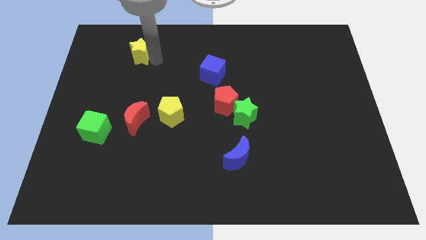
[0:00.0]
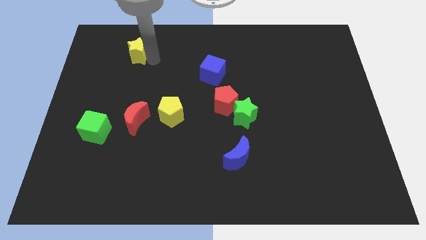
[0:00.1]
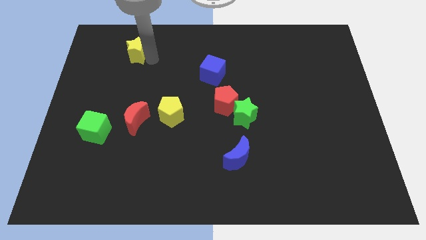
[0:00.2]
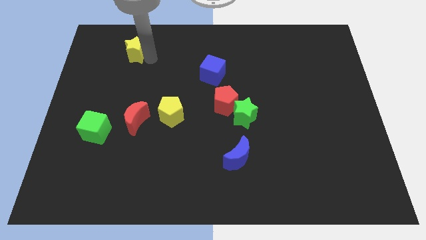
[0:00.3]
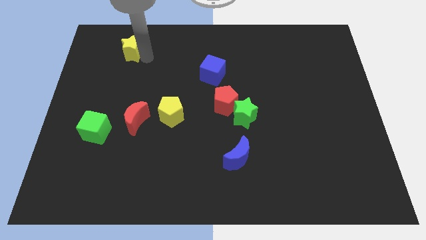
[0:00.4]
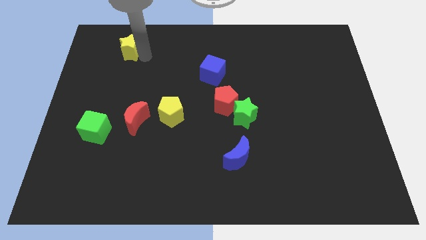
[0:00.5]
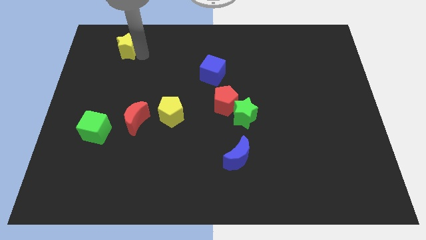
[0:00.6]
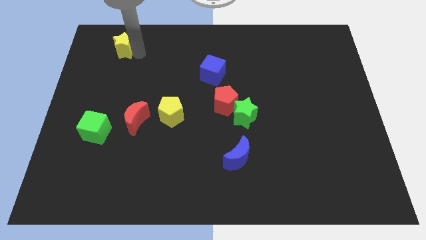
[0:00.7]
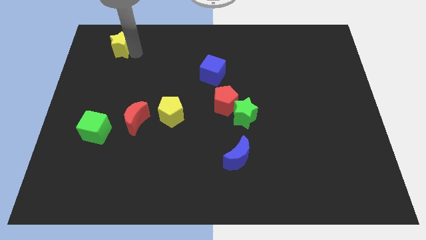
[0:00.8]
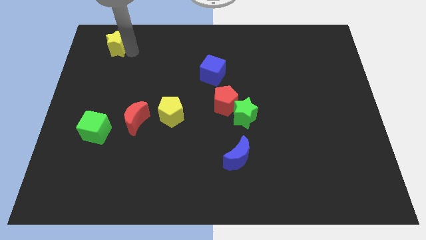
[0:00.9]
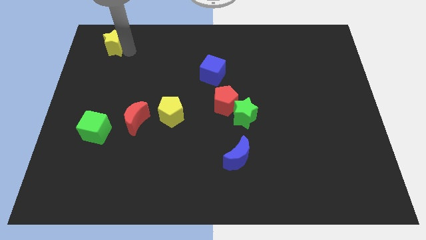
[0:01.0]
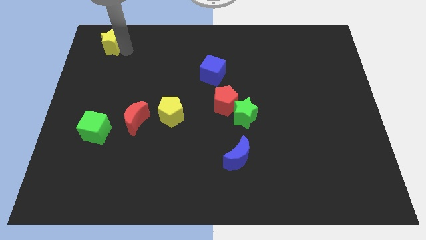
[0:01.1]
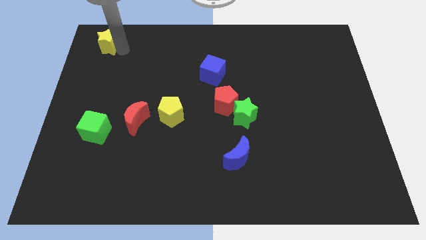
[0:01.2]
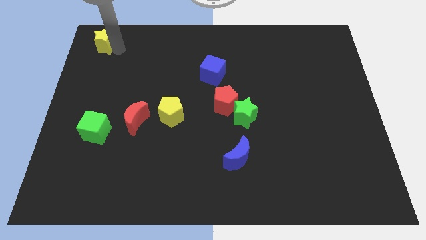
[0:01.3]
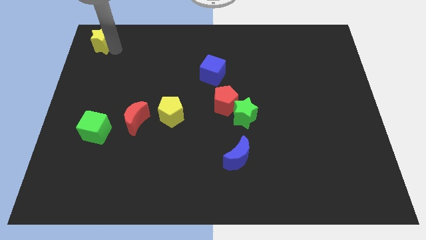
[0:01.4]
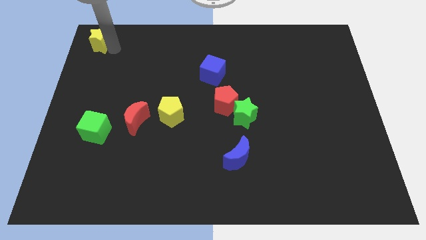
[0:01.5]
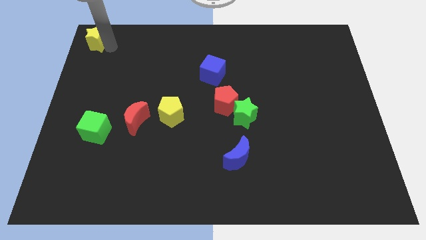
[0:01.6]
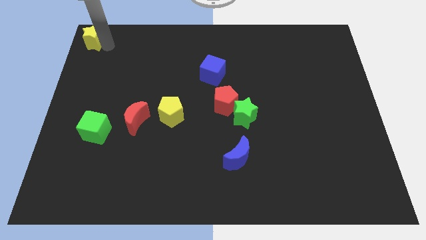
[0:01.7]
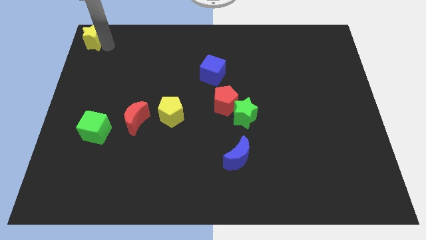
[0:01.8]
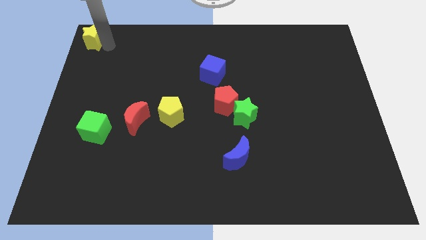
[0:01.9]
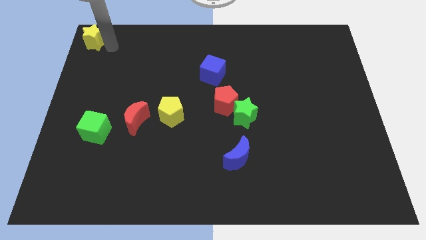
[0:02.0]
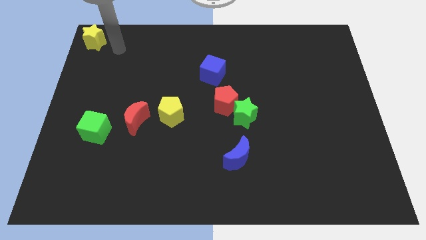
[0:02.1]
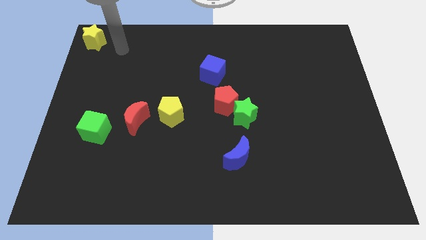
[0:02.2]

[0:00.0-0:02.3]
push the yellow star to the top left corner of the board

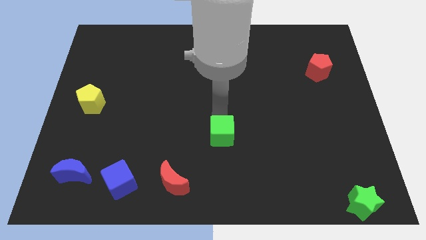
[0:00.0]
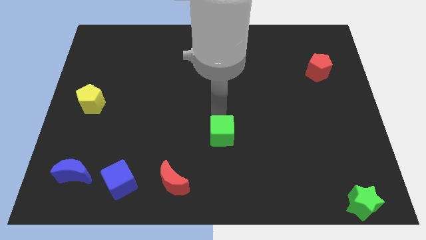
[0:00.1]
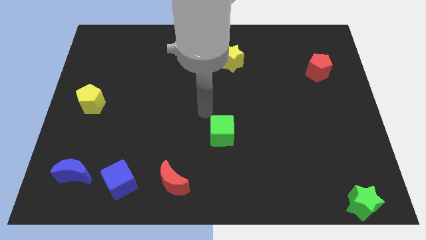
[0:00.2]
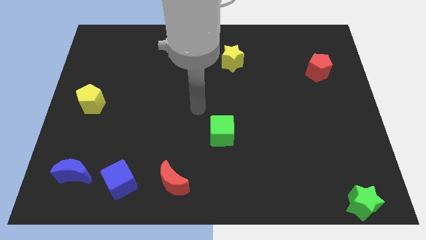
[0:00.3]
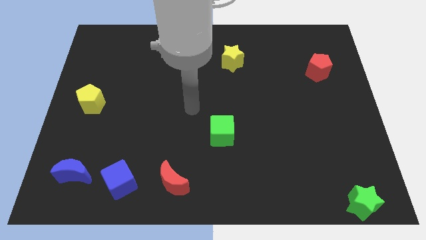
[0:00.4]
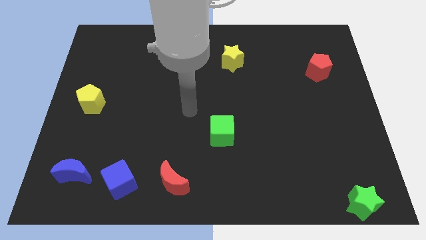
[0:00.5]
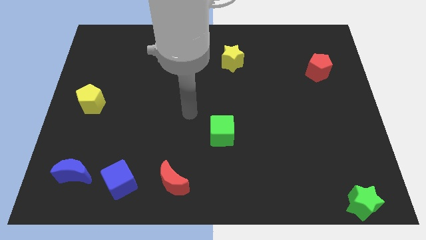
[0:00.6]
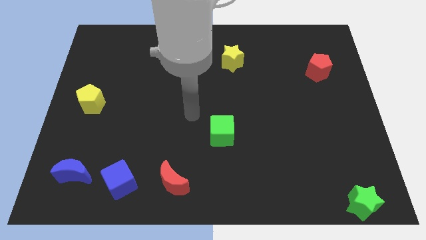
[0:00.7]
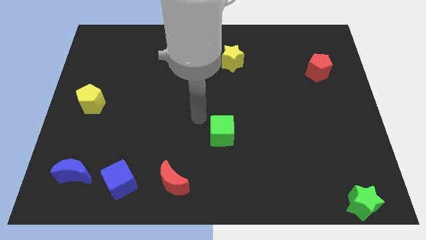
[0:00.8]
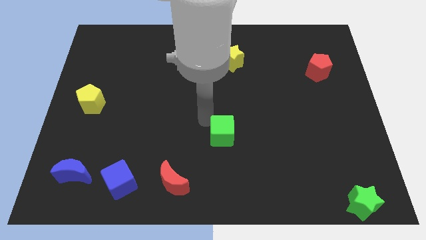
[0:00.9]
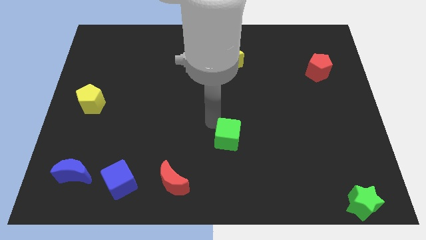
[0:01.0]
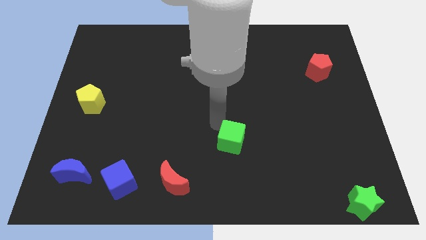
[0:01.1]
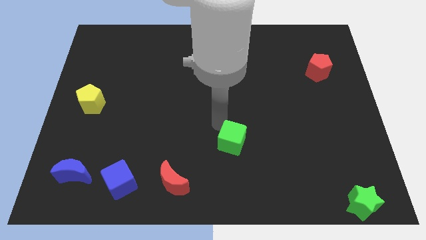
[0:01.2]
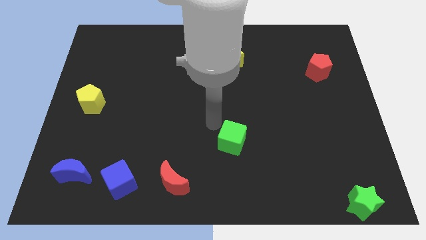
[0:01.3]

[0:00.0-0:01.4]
push the green cube slightly to the bottom right of the board

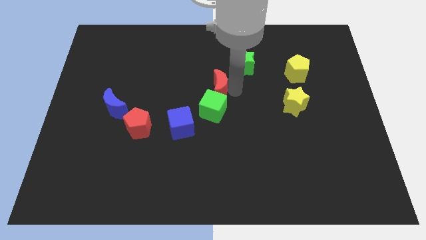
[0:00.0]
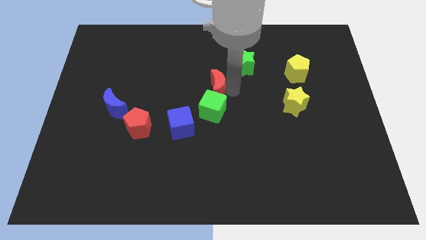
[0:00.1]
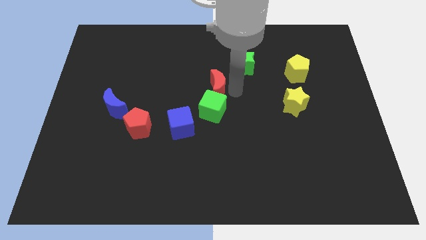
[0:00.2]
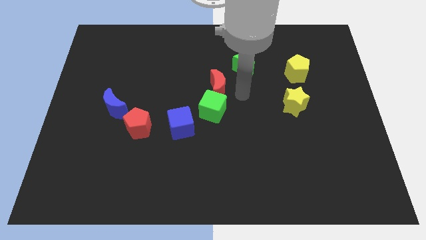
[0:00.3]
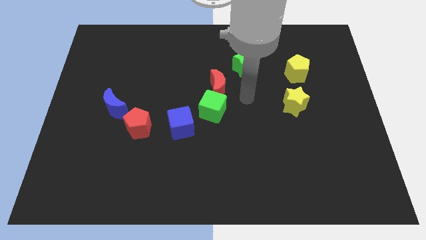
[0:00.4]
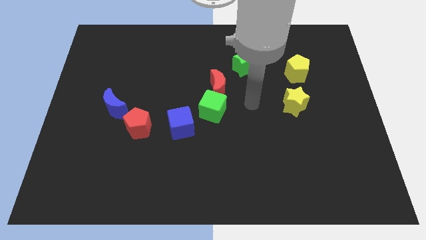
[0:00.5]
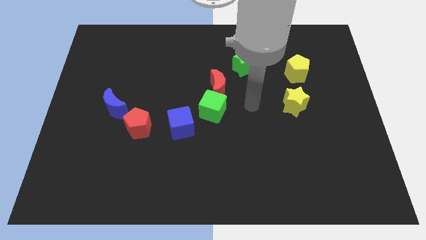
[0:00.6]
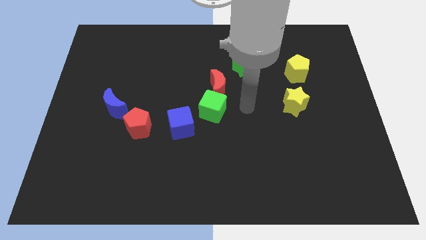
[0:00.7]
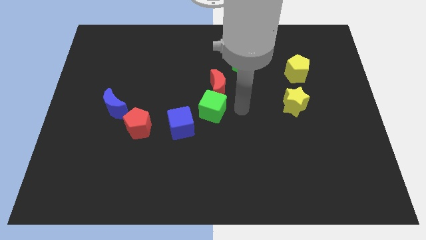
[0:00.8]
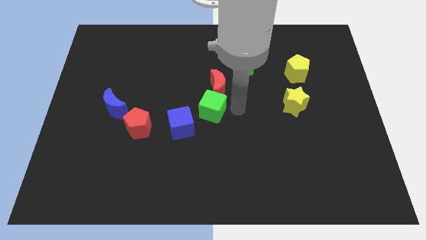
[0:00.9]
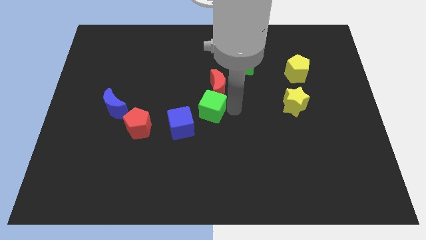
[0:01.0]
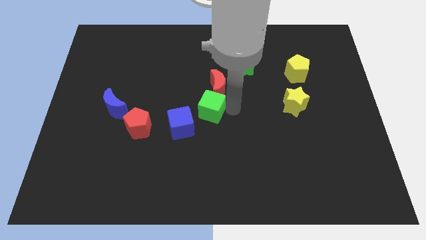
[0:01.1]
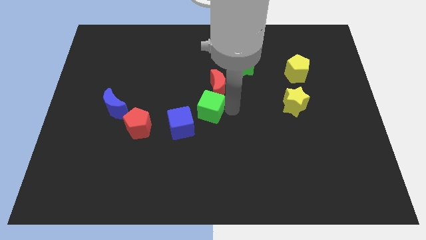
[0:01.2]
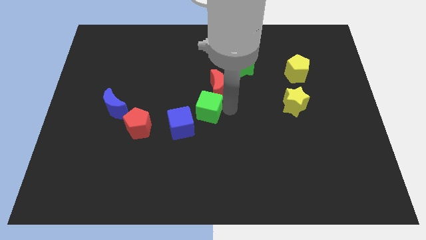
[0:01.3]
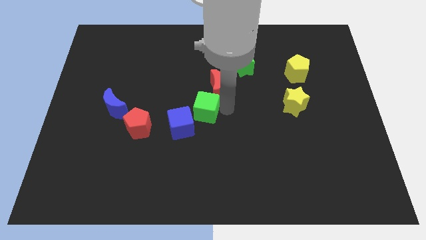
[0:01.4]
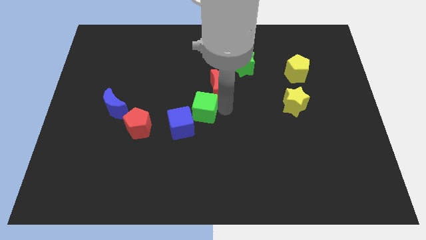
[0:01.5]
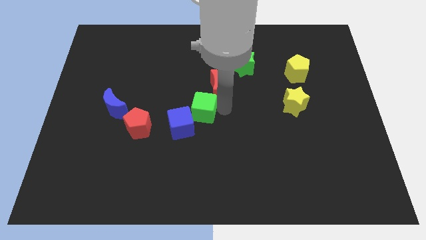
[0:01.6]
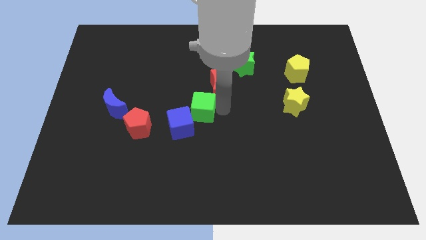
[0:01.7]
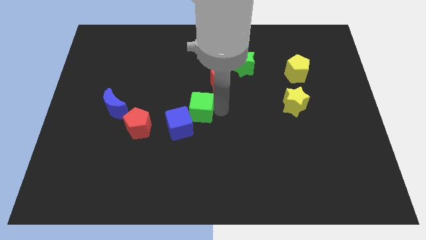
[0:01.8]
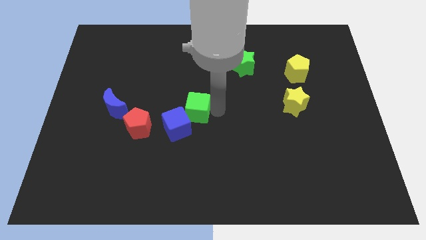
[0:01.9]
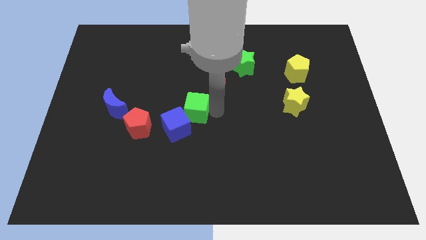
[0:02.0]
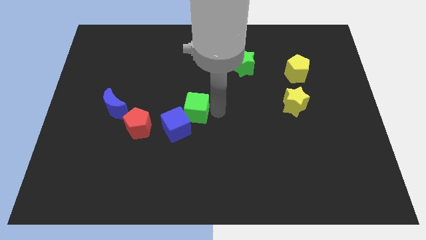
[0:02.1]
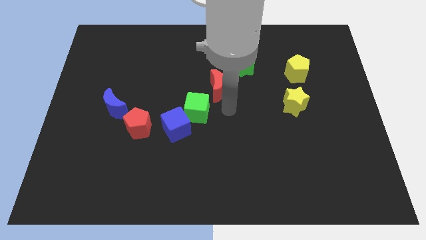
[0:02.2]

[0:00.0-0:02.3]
push green cube towards blue cube

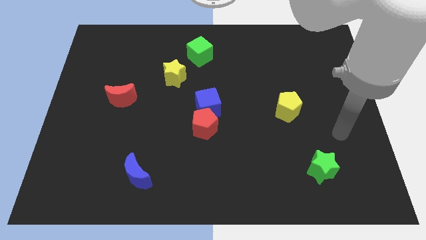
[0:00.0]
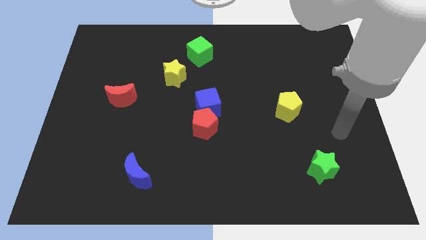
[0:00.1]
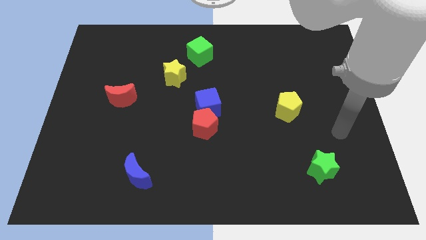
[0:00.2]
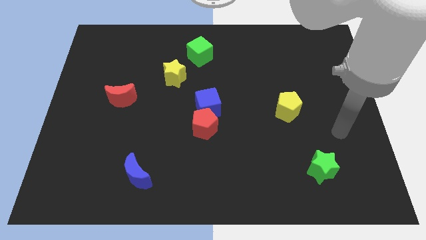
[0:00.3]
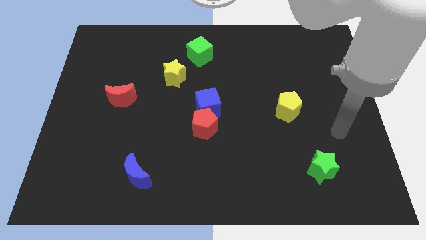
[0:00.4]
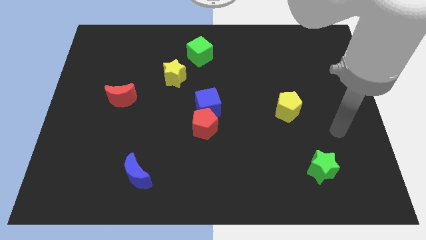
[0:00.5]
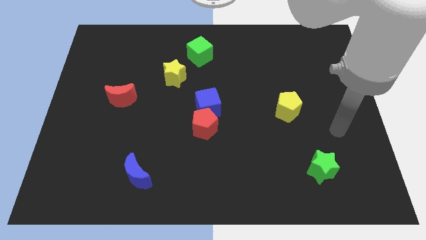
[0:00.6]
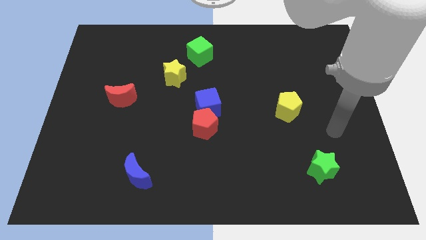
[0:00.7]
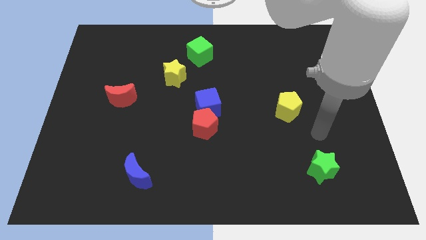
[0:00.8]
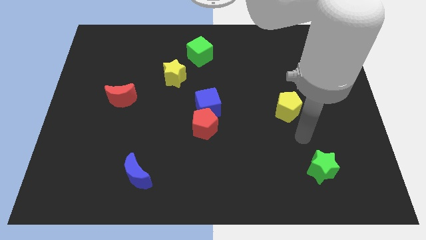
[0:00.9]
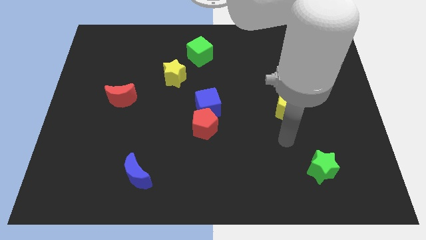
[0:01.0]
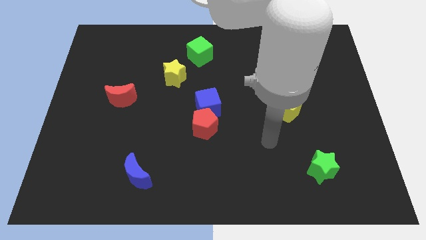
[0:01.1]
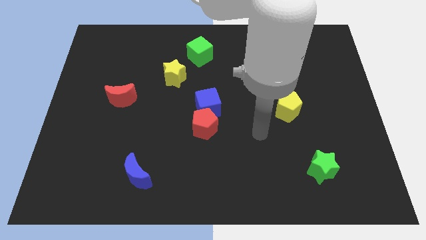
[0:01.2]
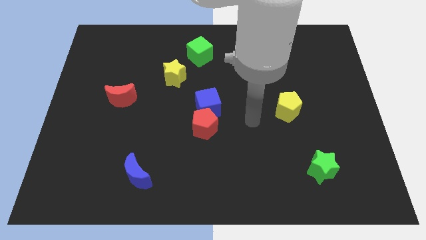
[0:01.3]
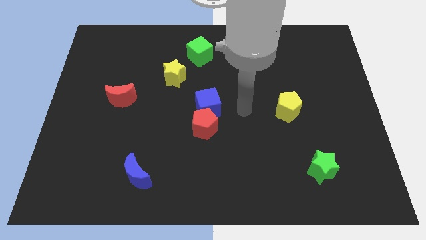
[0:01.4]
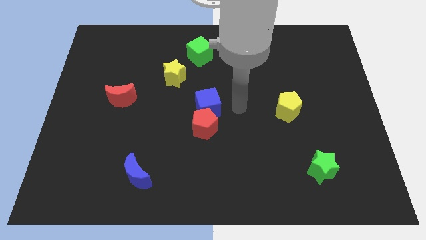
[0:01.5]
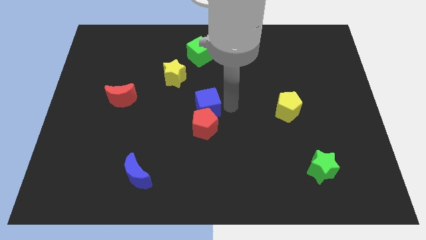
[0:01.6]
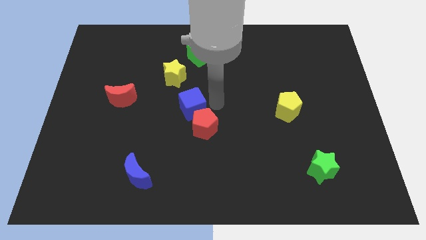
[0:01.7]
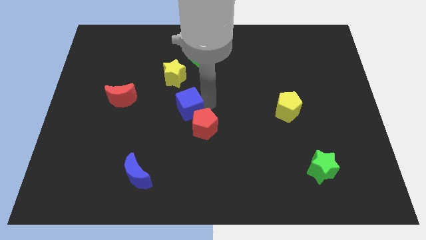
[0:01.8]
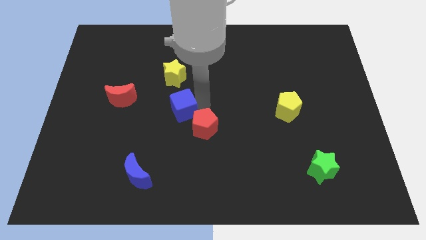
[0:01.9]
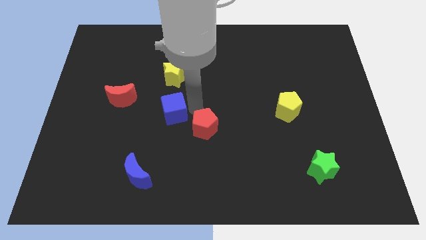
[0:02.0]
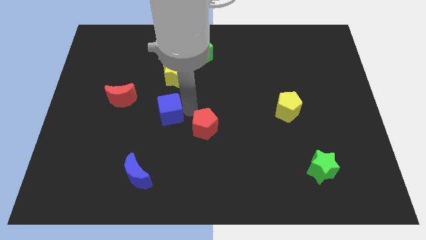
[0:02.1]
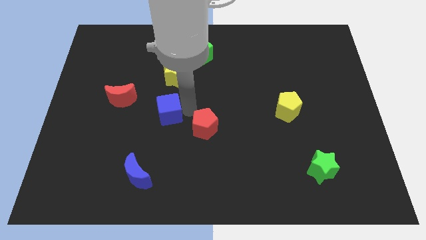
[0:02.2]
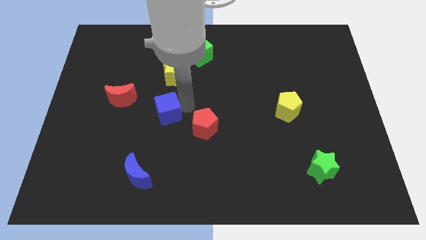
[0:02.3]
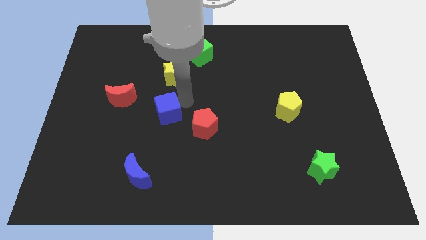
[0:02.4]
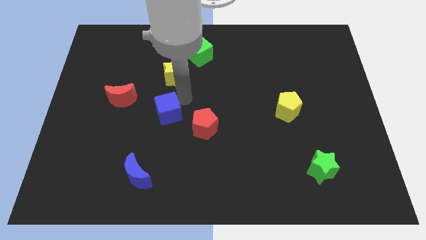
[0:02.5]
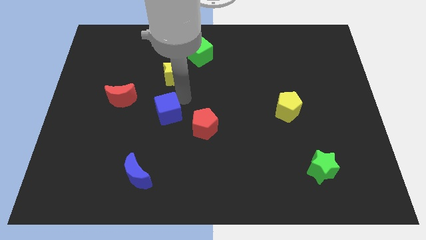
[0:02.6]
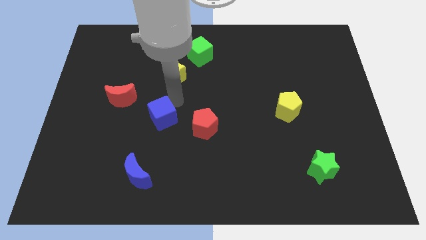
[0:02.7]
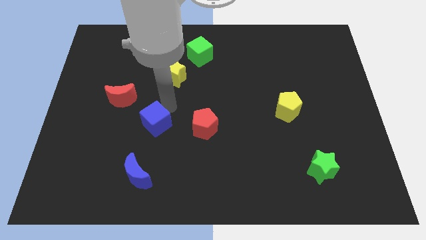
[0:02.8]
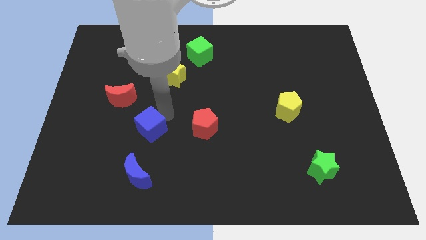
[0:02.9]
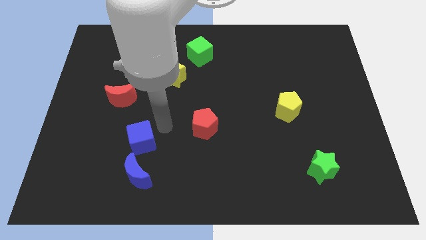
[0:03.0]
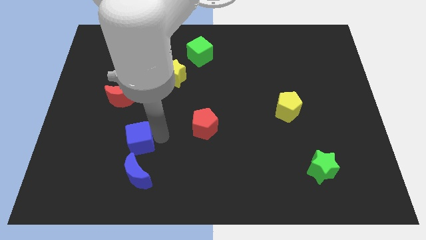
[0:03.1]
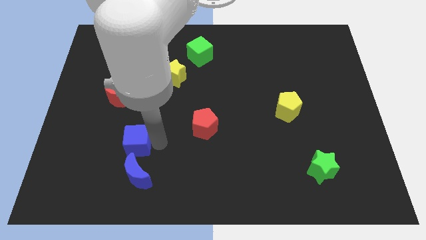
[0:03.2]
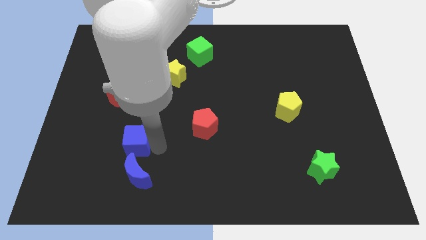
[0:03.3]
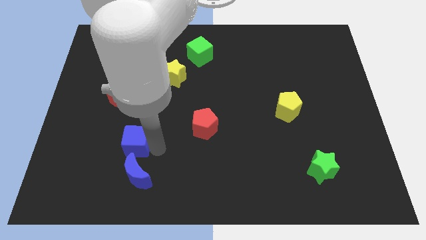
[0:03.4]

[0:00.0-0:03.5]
slide the blue cube above the blue moon
